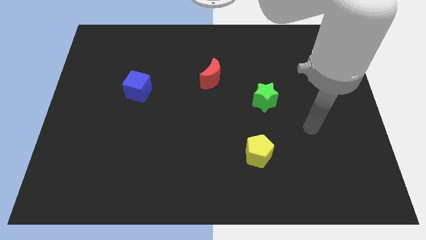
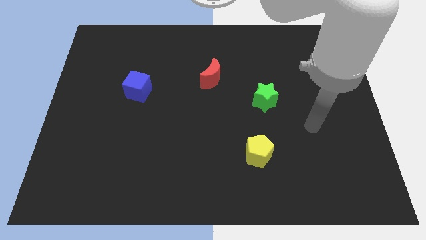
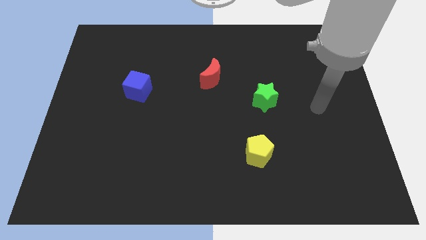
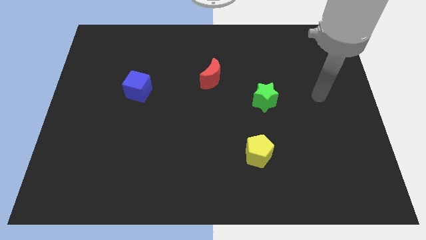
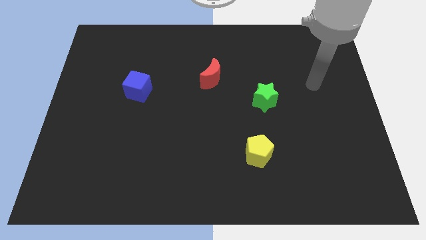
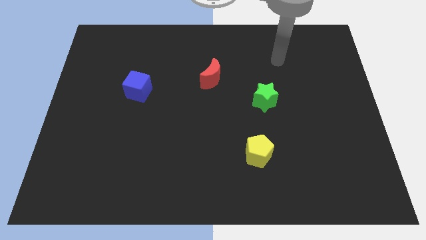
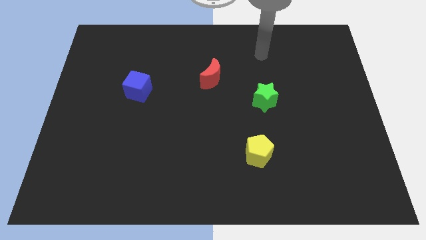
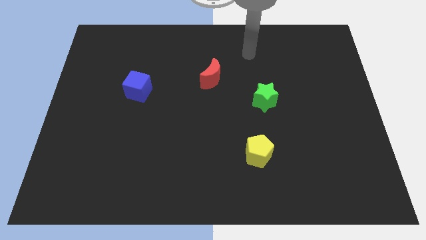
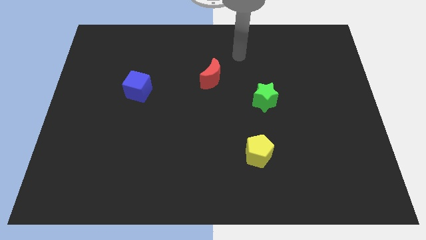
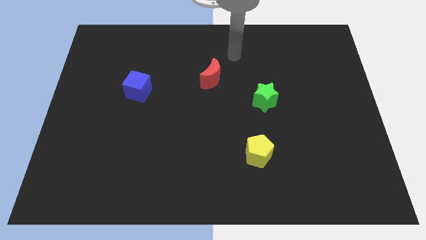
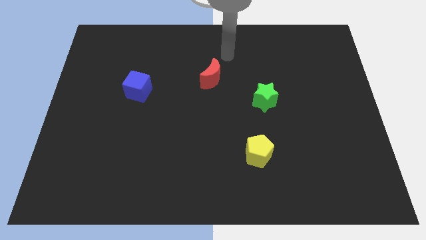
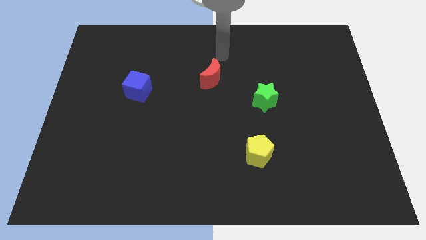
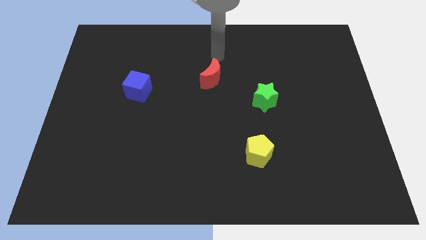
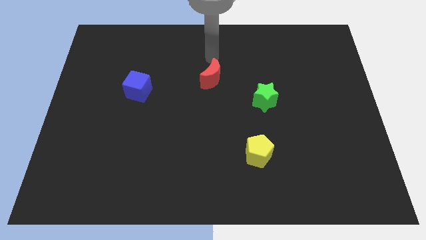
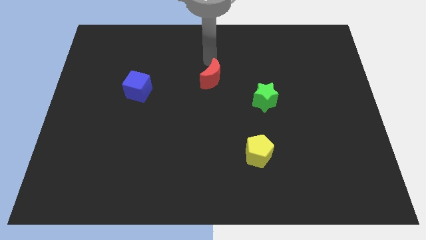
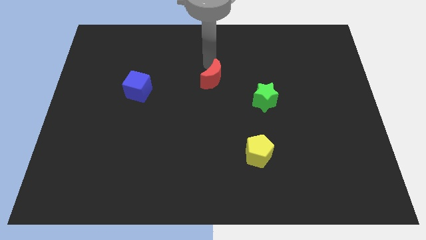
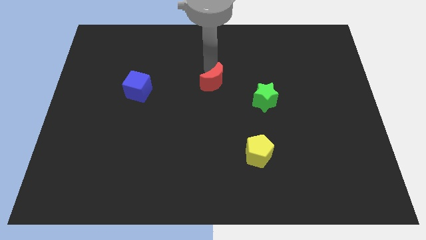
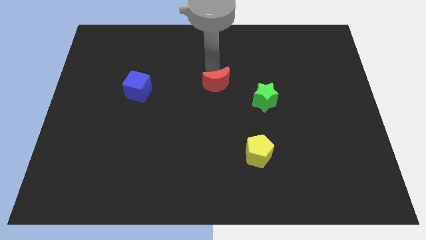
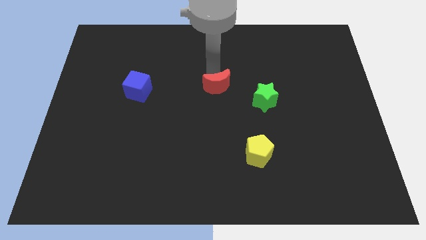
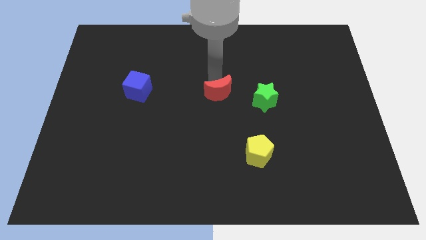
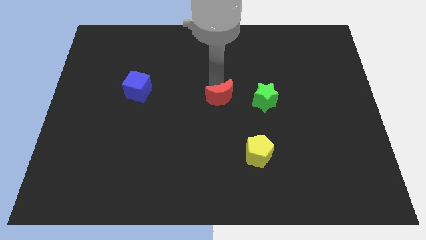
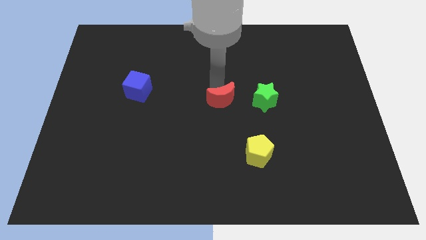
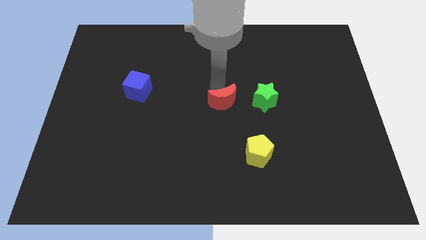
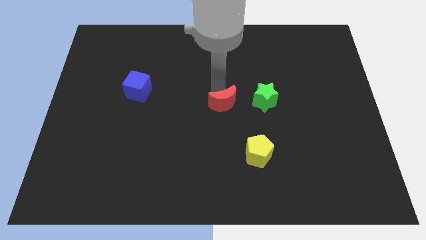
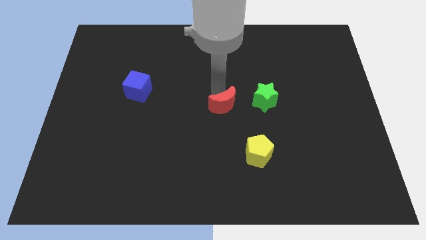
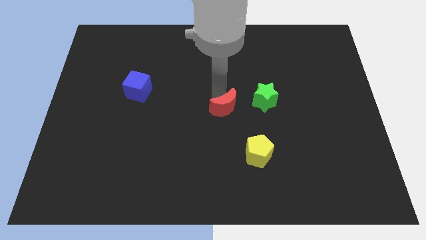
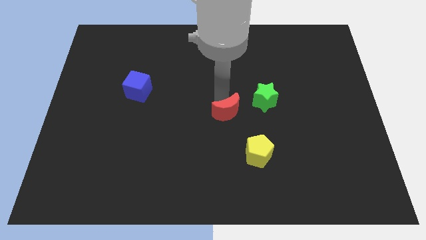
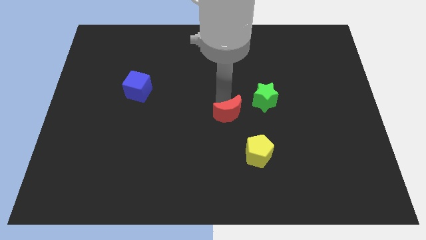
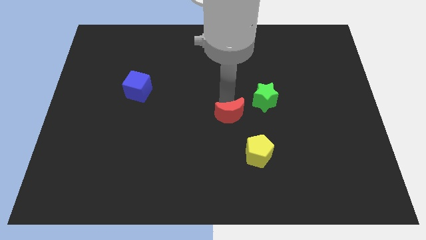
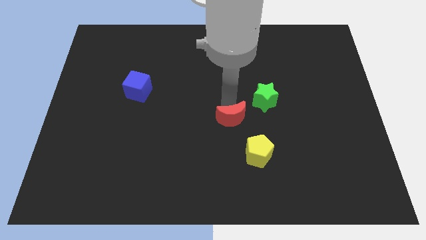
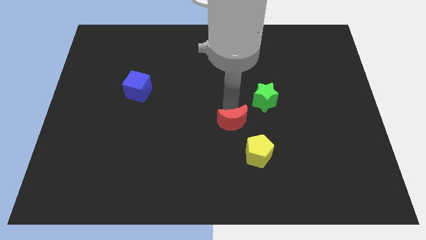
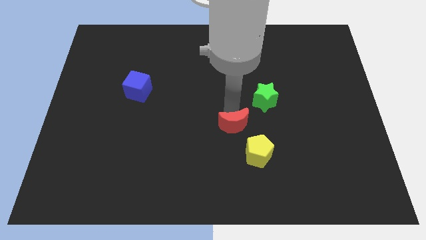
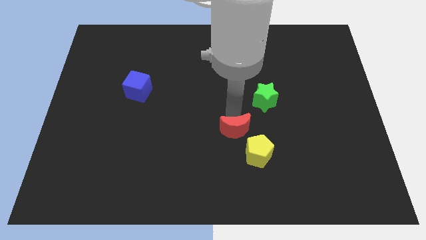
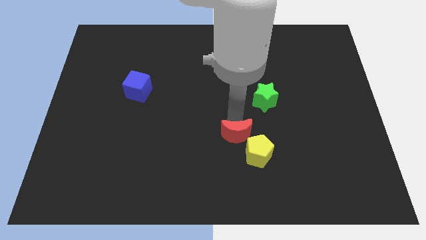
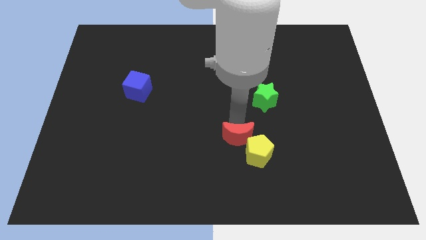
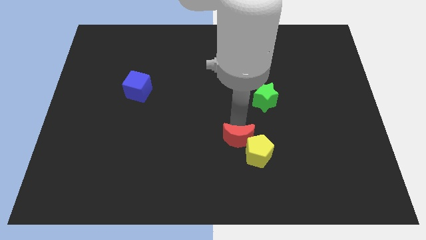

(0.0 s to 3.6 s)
move the red block close to the yellow block

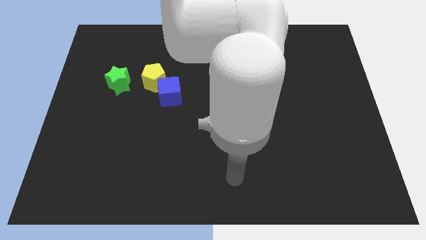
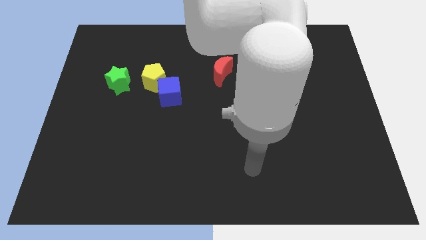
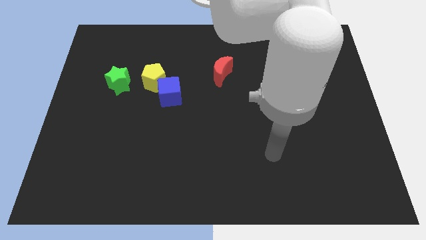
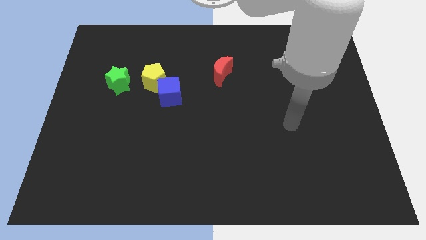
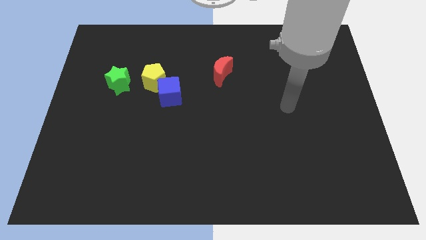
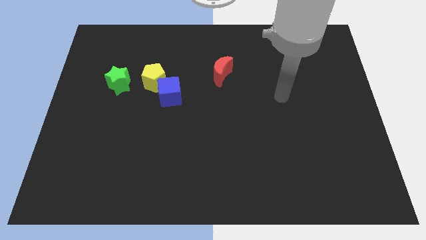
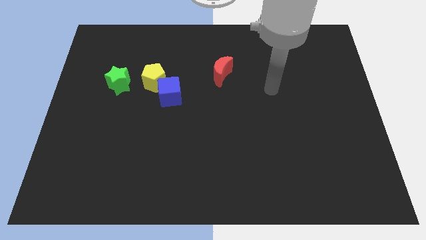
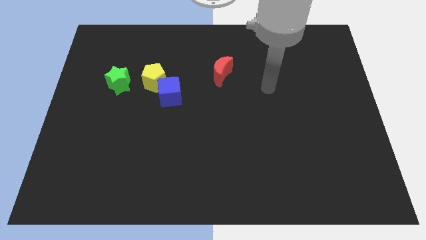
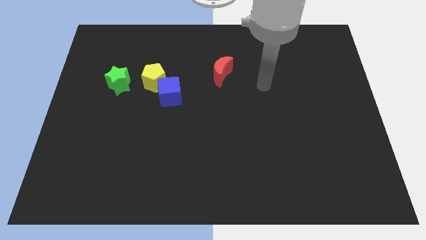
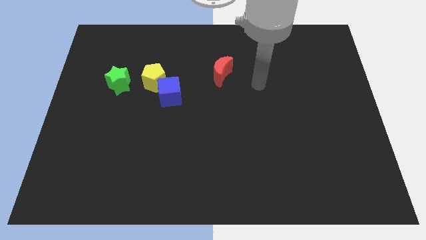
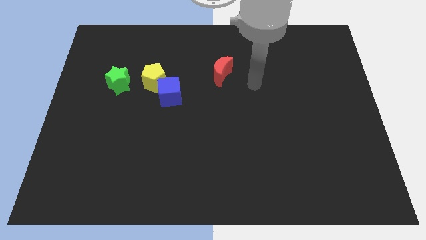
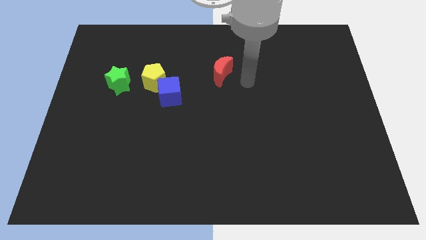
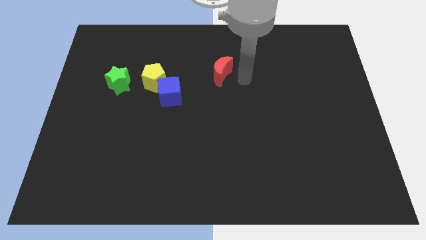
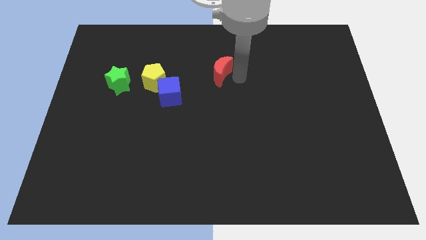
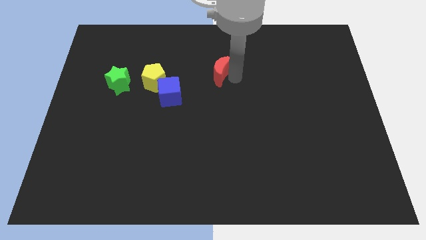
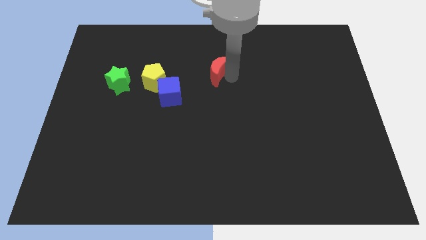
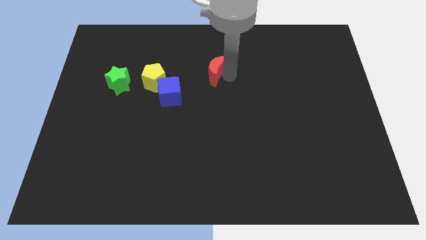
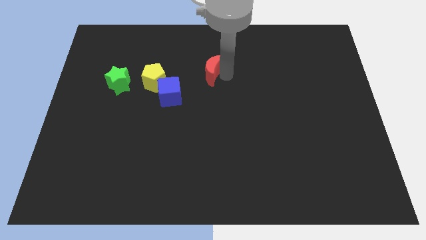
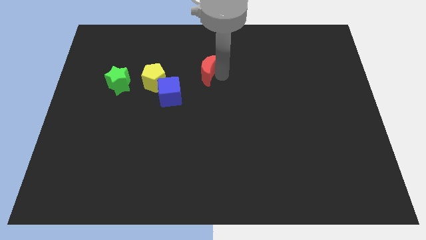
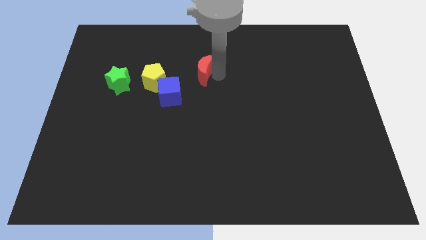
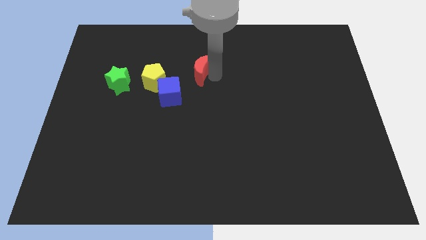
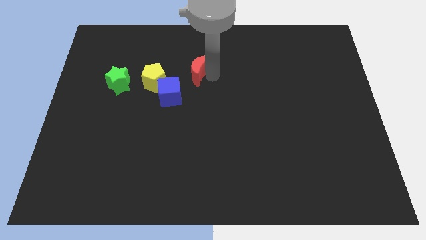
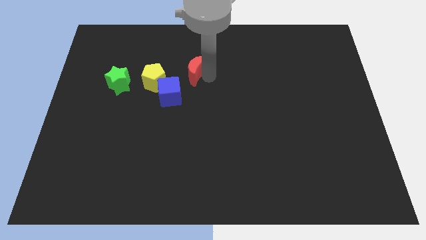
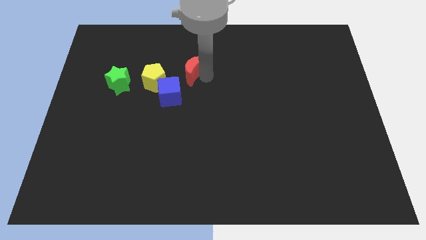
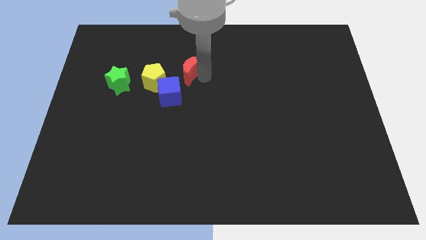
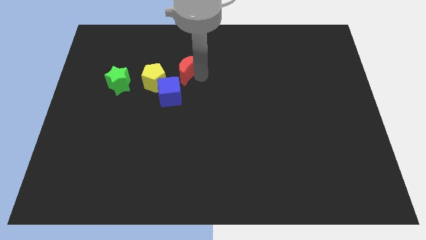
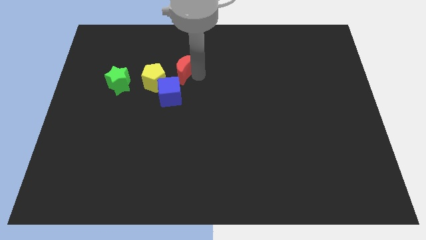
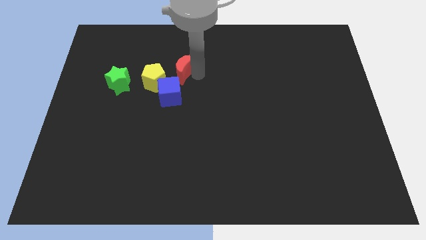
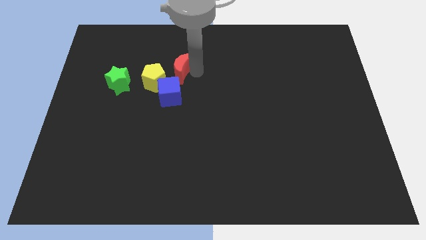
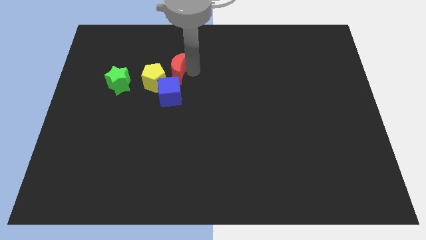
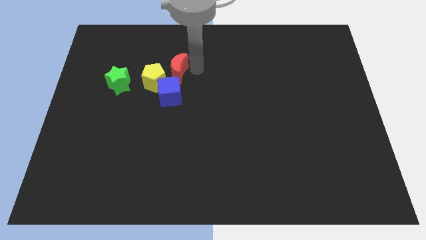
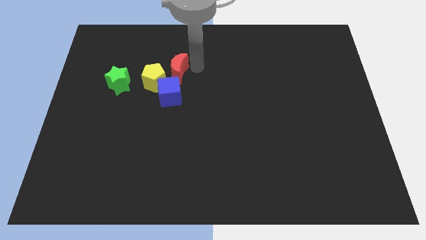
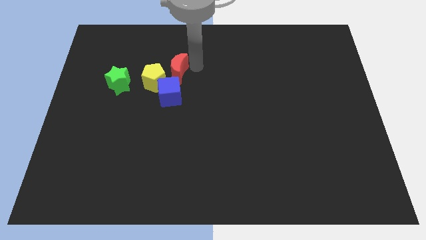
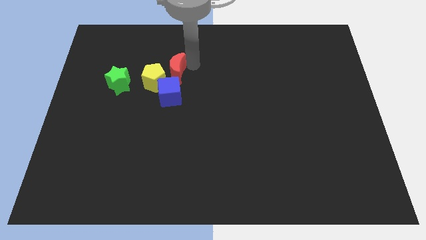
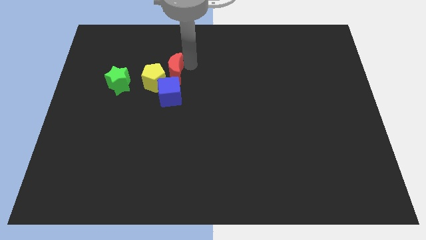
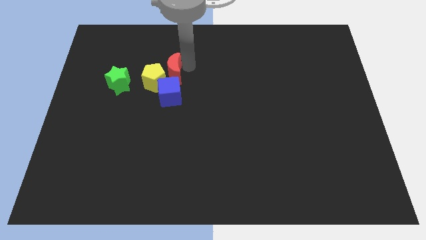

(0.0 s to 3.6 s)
move the moon towards the yellow pentagon

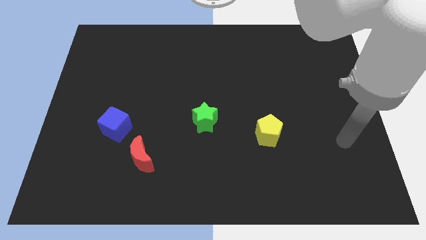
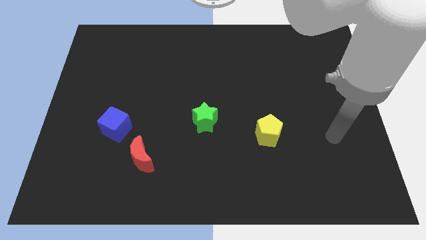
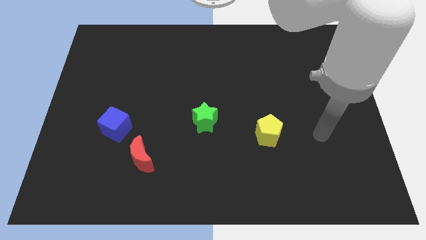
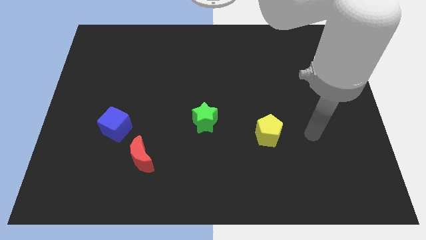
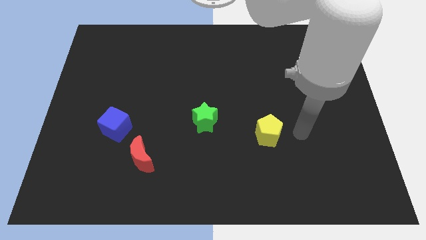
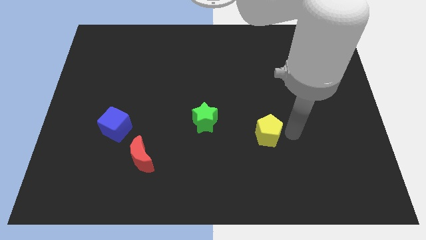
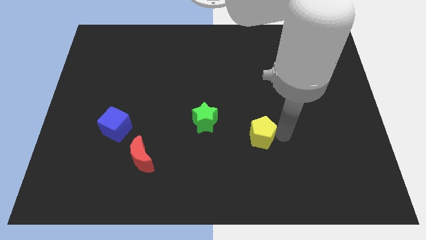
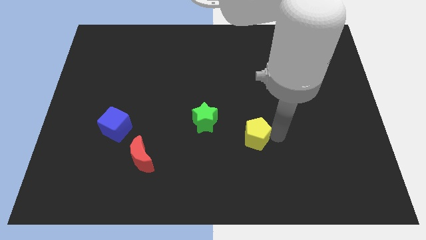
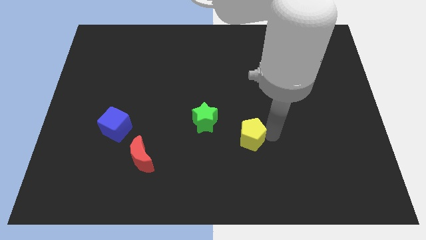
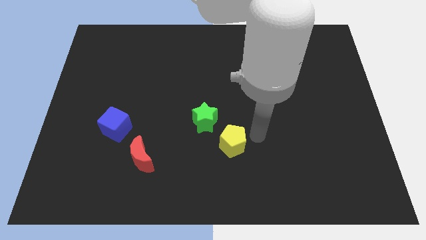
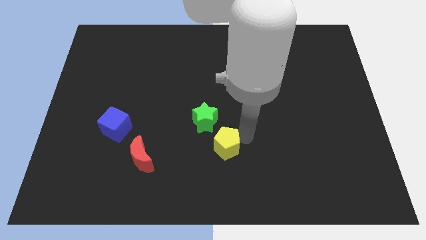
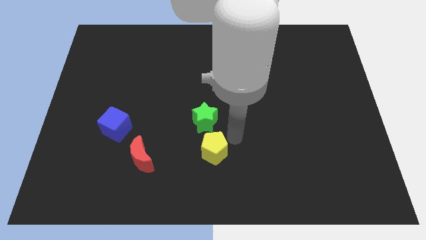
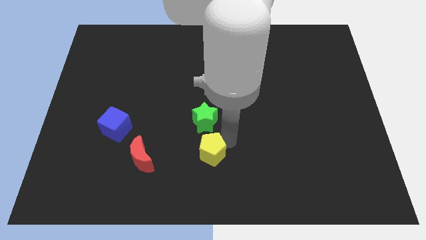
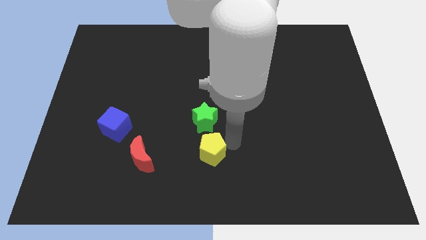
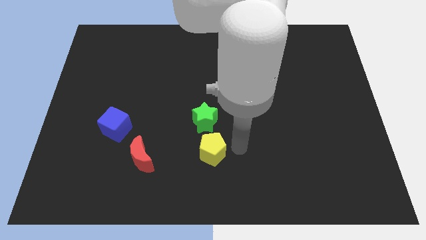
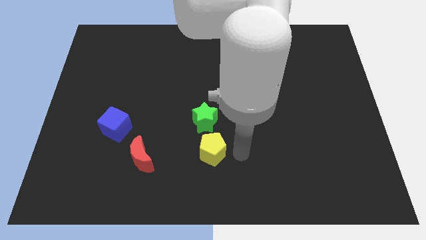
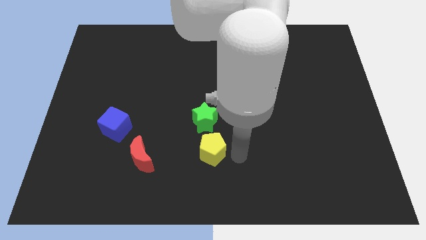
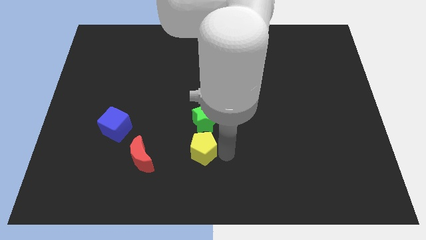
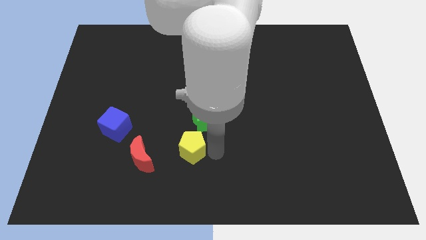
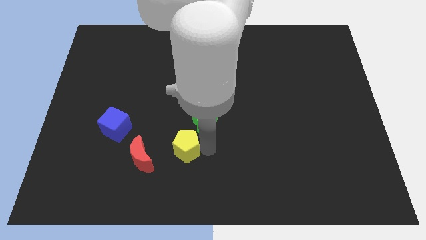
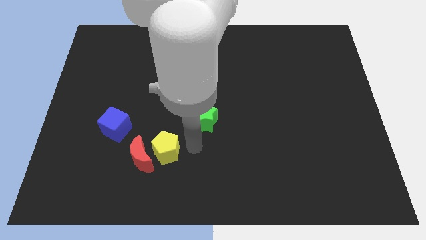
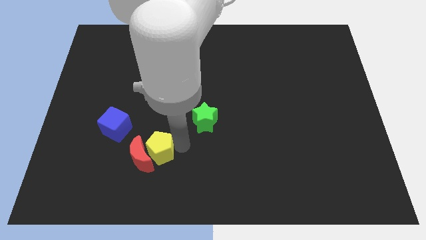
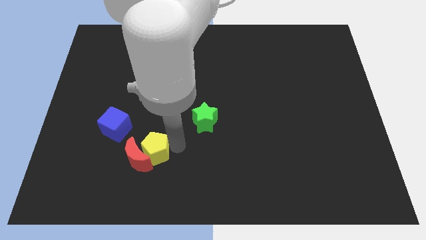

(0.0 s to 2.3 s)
push the yellow pentagon next to the red moon
